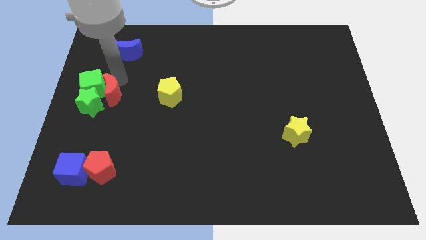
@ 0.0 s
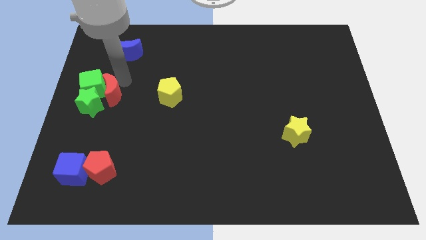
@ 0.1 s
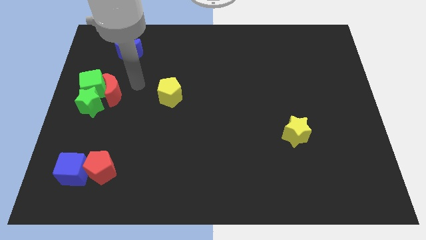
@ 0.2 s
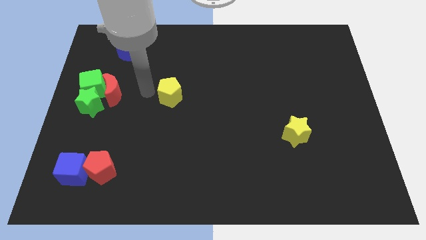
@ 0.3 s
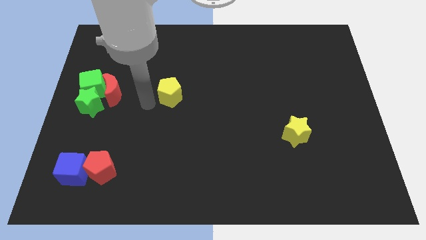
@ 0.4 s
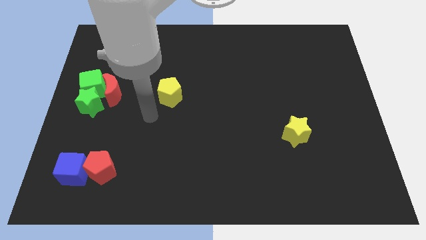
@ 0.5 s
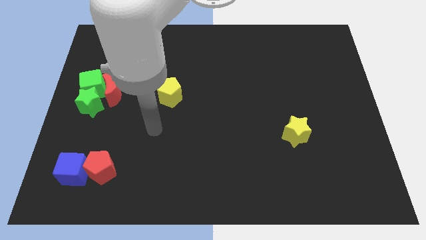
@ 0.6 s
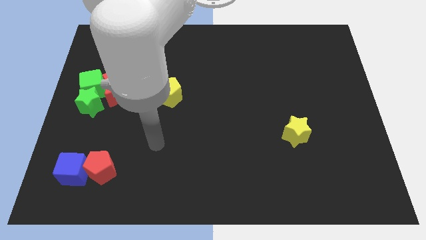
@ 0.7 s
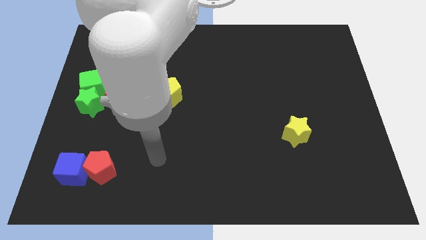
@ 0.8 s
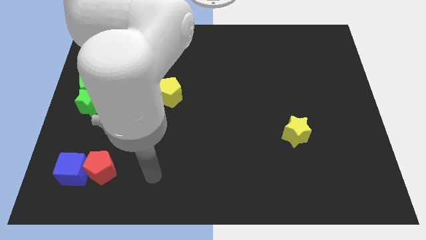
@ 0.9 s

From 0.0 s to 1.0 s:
move your arm away from the red crescent

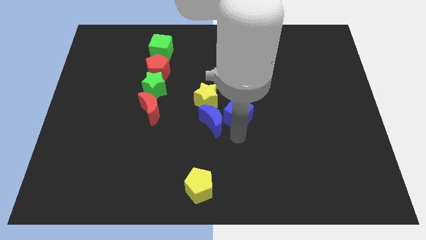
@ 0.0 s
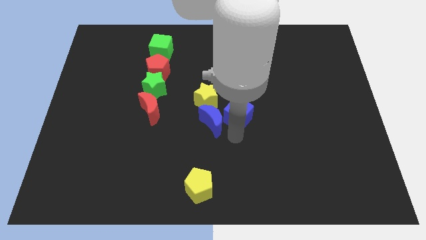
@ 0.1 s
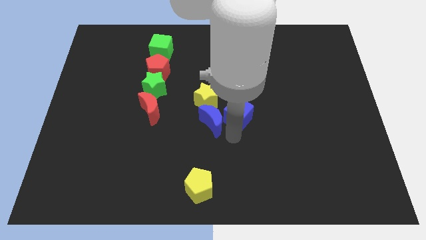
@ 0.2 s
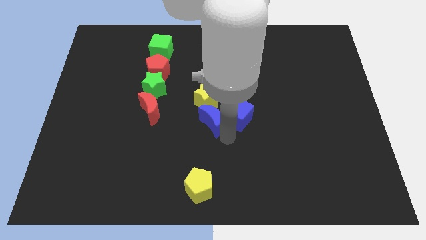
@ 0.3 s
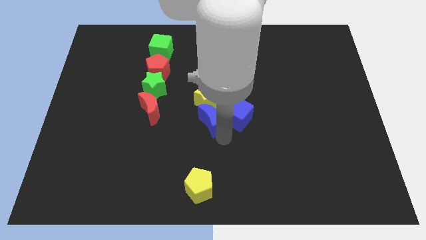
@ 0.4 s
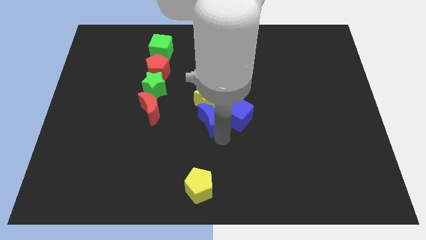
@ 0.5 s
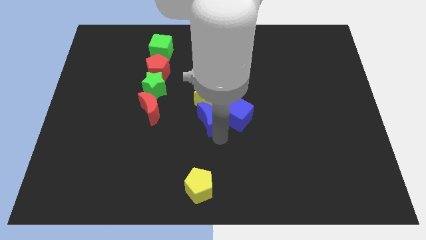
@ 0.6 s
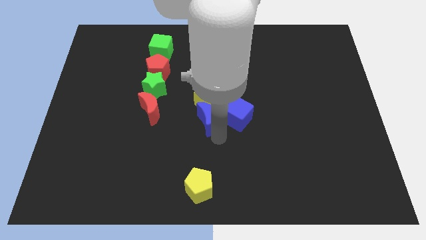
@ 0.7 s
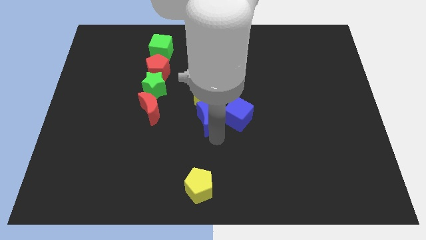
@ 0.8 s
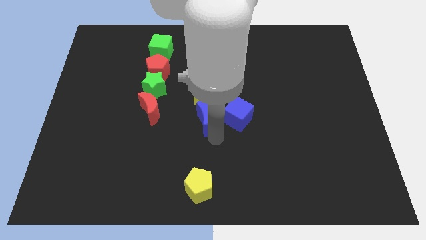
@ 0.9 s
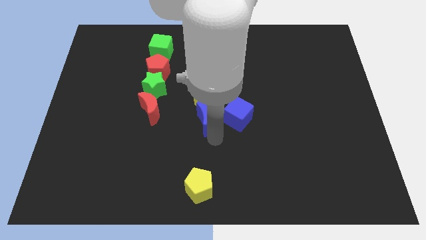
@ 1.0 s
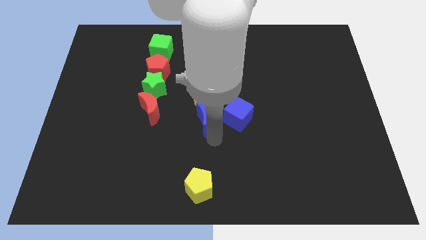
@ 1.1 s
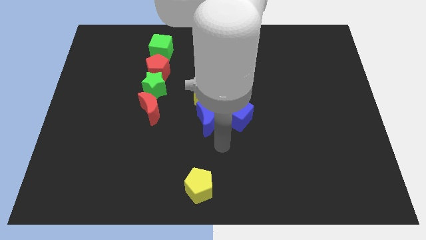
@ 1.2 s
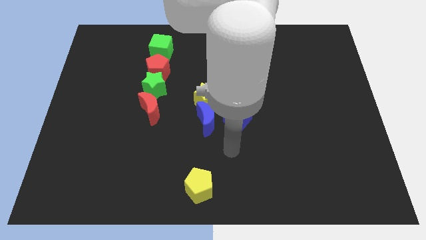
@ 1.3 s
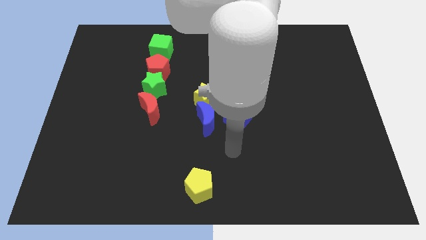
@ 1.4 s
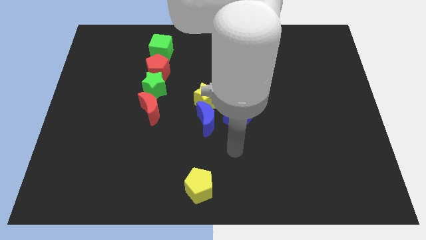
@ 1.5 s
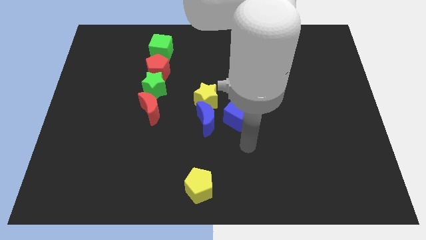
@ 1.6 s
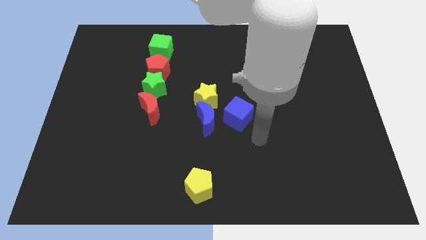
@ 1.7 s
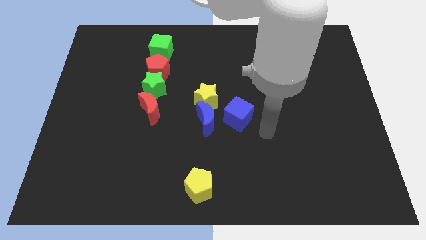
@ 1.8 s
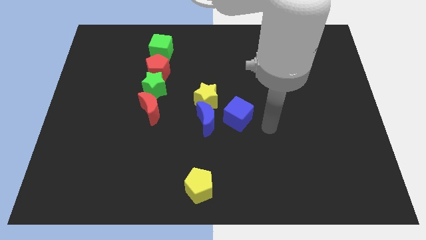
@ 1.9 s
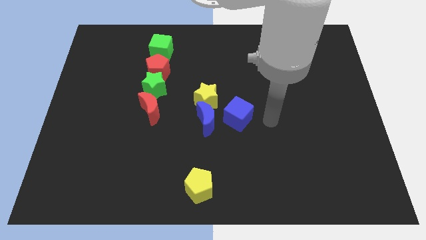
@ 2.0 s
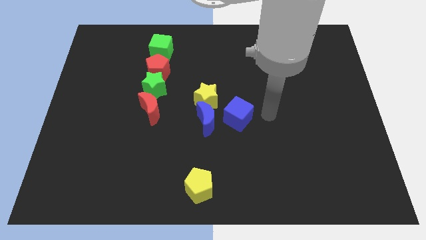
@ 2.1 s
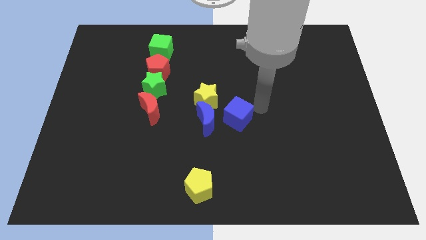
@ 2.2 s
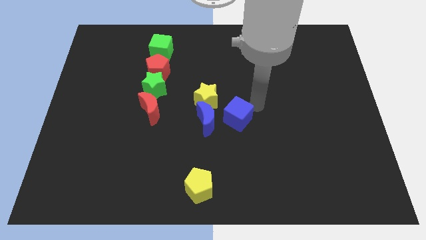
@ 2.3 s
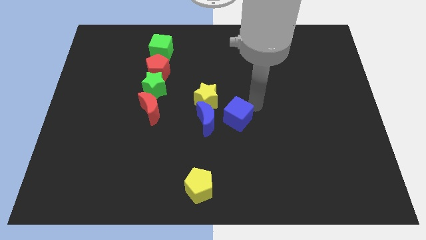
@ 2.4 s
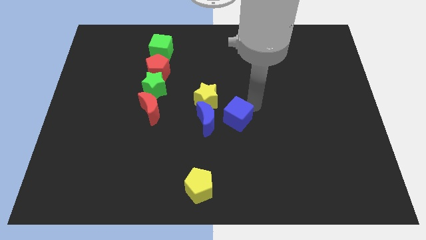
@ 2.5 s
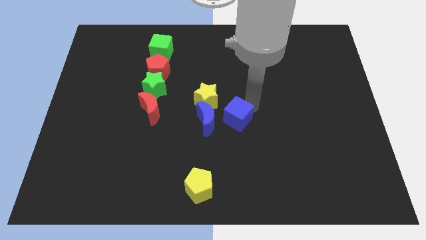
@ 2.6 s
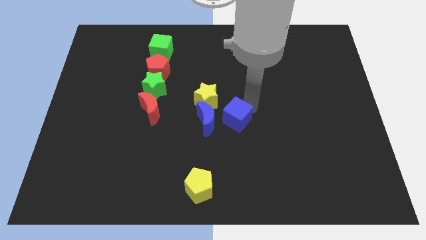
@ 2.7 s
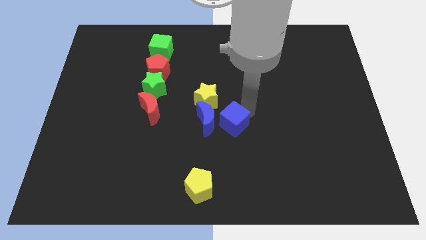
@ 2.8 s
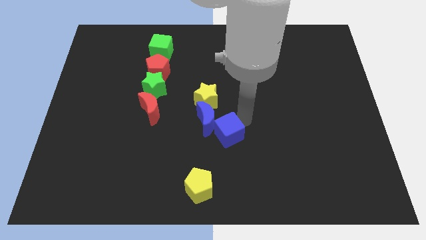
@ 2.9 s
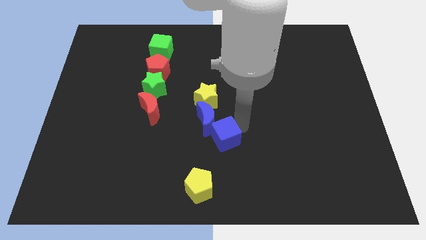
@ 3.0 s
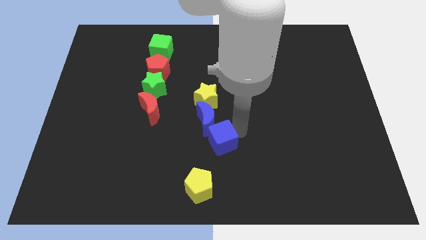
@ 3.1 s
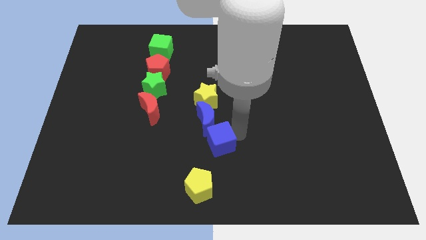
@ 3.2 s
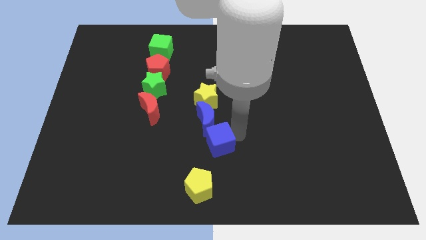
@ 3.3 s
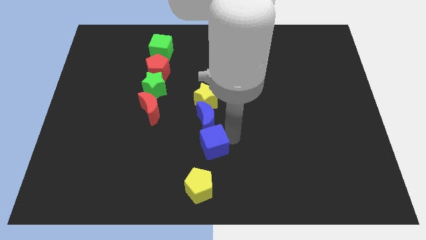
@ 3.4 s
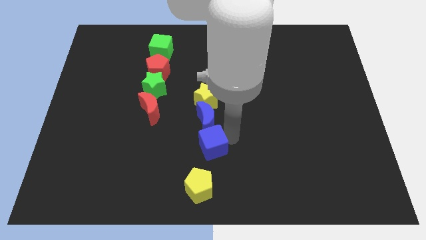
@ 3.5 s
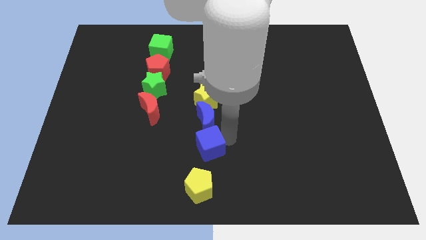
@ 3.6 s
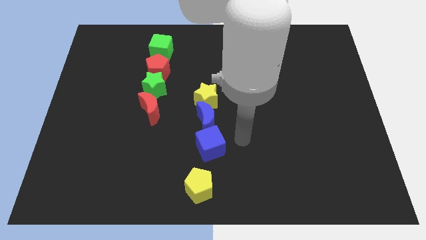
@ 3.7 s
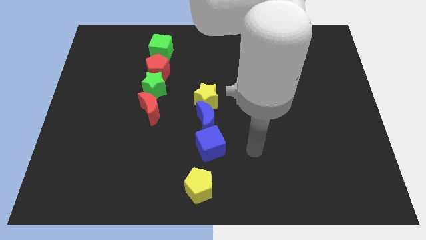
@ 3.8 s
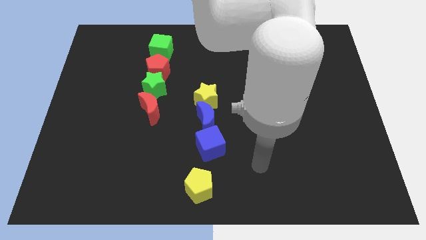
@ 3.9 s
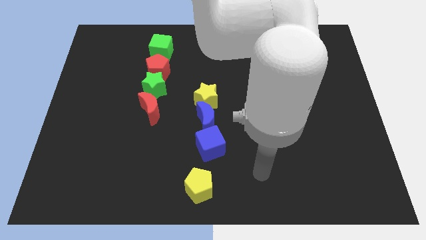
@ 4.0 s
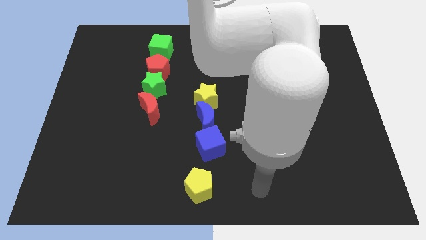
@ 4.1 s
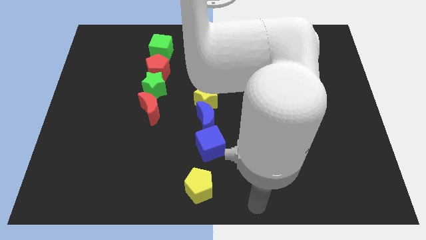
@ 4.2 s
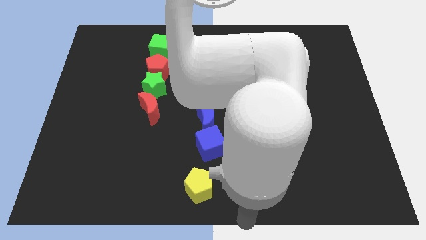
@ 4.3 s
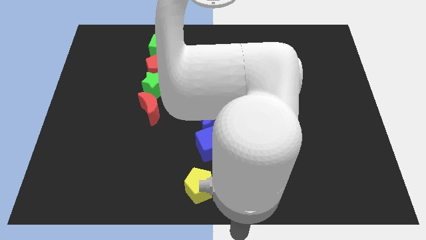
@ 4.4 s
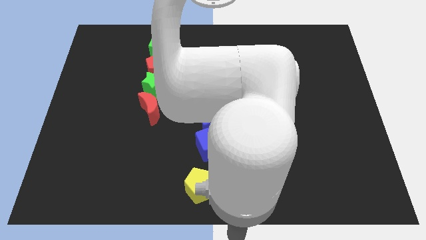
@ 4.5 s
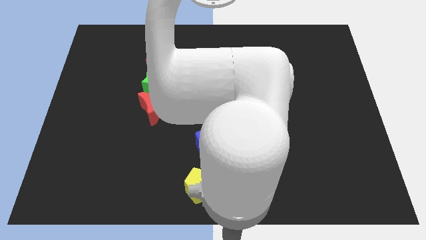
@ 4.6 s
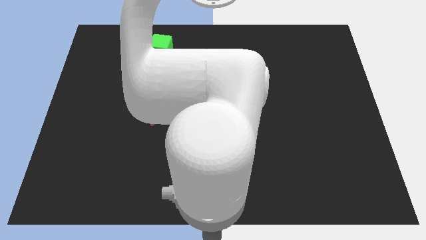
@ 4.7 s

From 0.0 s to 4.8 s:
place the blue cube below the blue moon

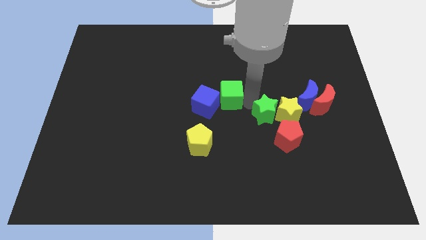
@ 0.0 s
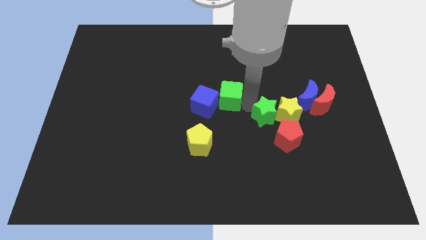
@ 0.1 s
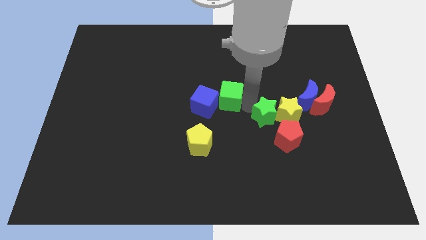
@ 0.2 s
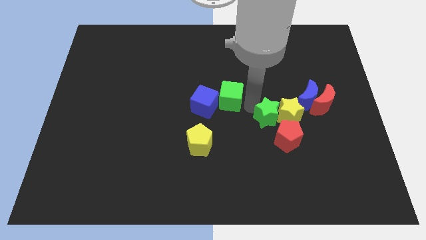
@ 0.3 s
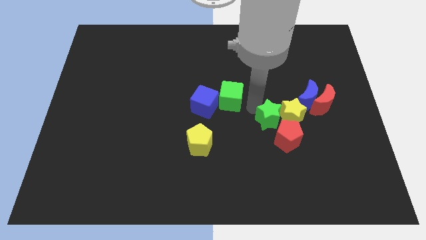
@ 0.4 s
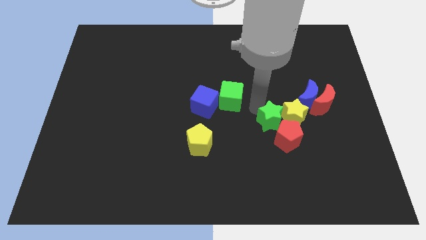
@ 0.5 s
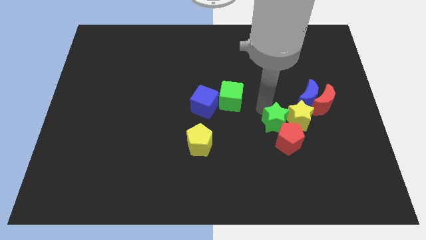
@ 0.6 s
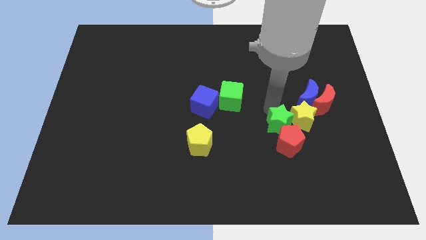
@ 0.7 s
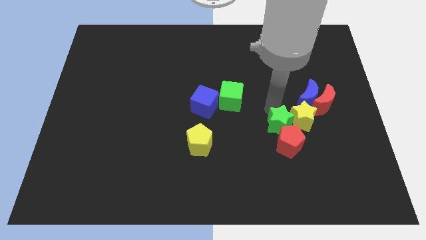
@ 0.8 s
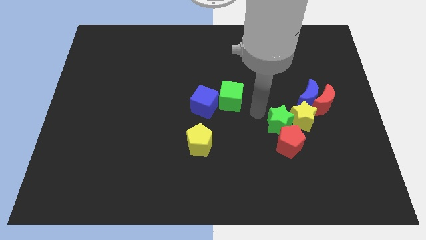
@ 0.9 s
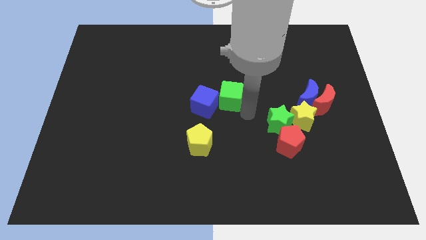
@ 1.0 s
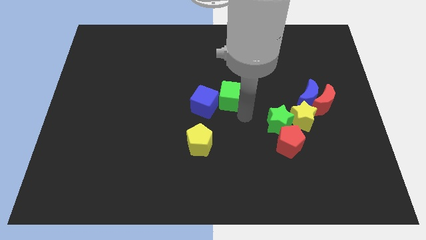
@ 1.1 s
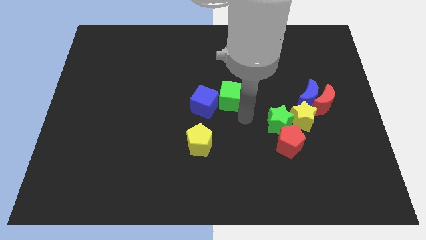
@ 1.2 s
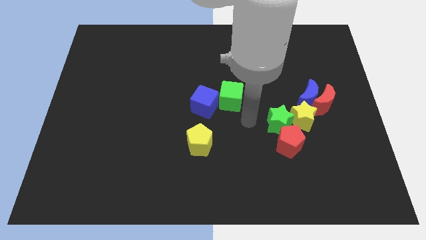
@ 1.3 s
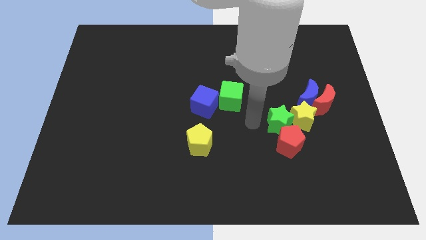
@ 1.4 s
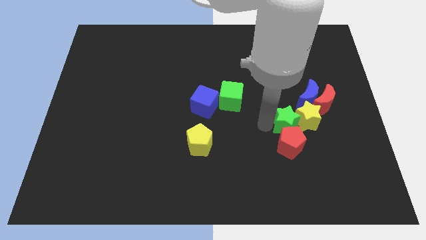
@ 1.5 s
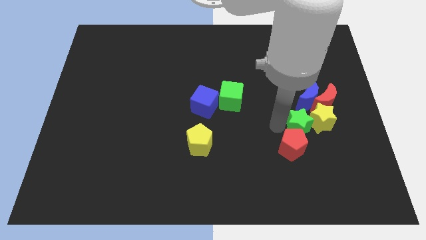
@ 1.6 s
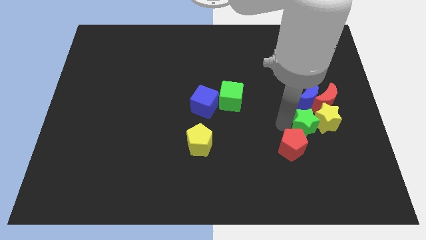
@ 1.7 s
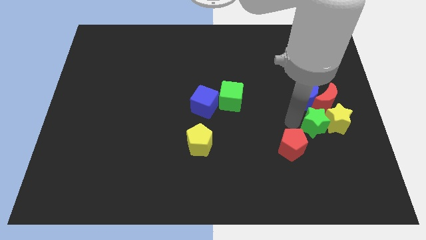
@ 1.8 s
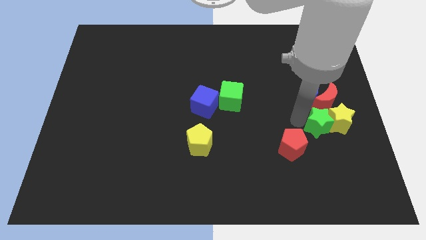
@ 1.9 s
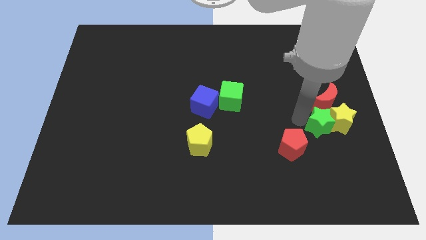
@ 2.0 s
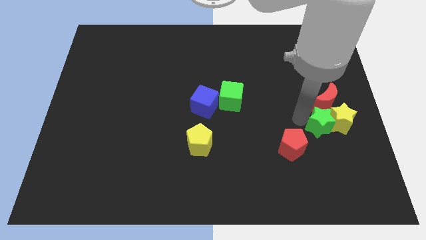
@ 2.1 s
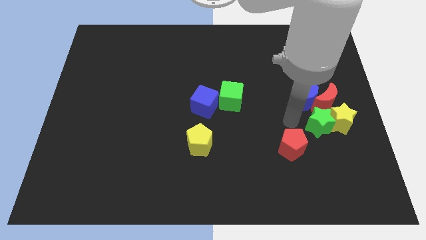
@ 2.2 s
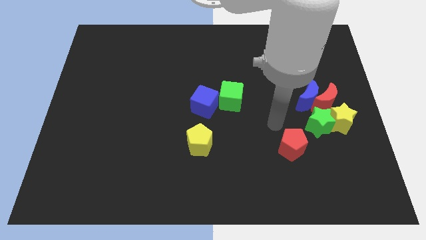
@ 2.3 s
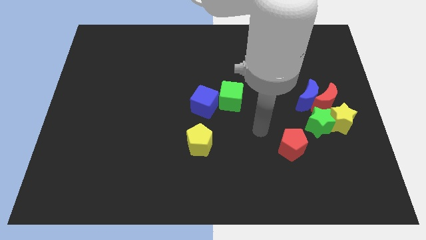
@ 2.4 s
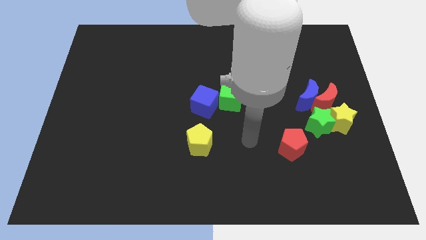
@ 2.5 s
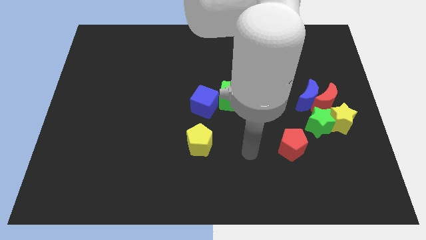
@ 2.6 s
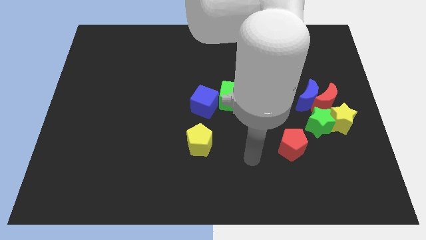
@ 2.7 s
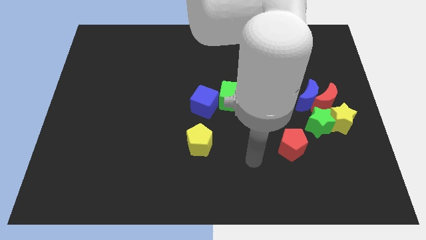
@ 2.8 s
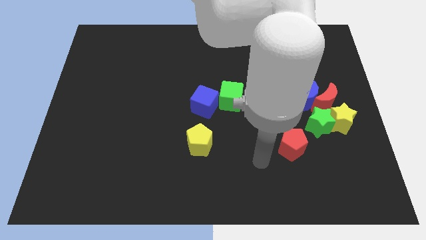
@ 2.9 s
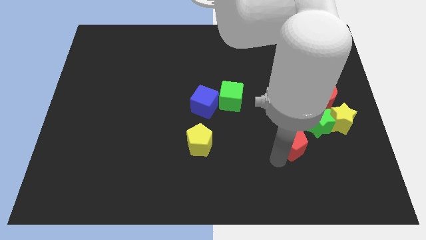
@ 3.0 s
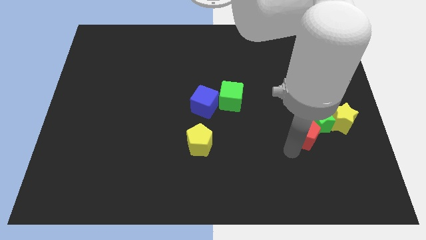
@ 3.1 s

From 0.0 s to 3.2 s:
push the stars to the right side of the board
